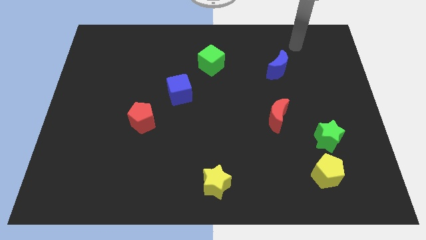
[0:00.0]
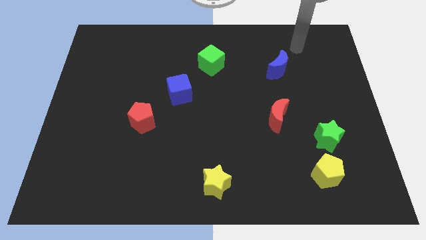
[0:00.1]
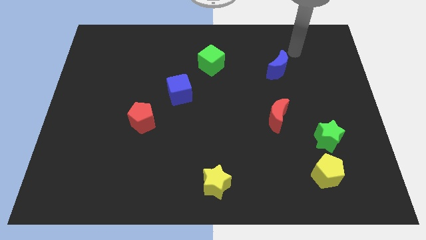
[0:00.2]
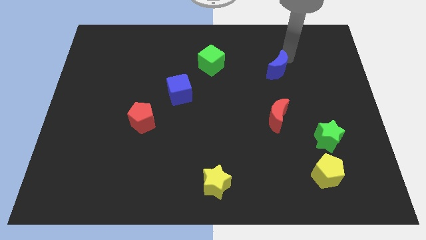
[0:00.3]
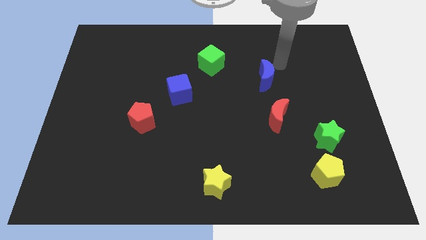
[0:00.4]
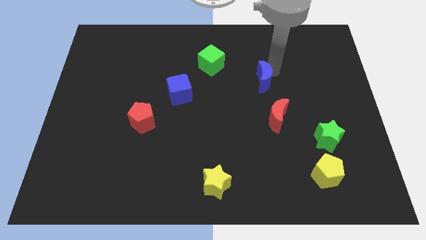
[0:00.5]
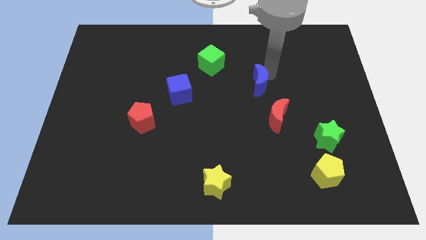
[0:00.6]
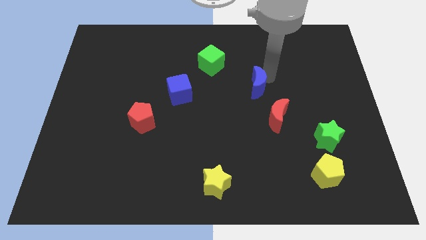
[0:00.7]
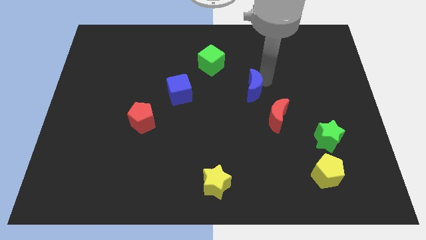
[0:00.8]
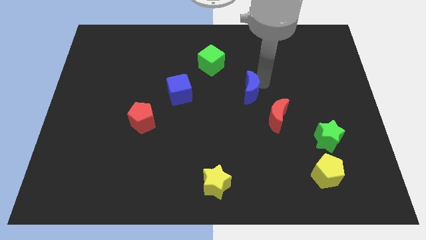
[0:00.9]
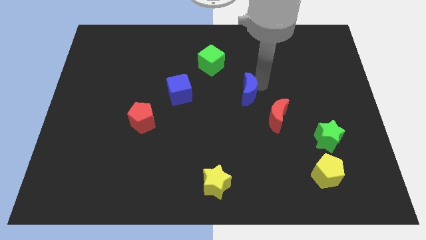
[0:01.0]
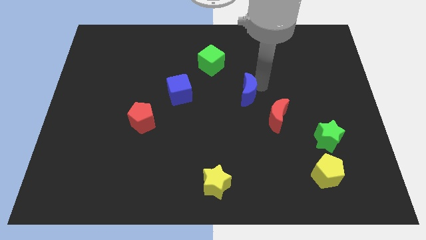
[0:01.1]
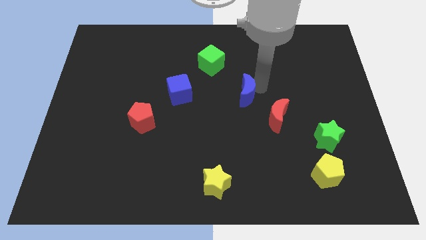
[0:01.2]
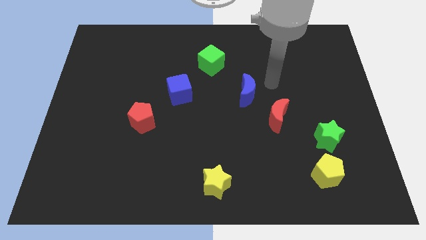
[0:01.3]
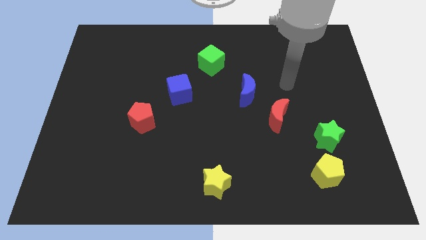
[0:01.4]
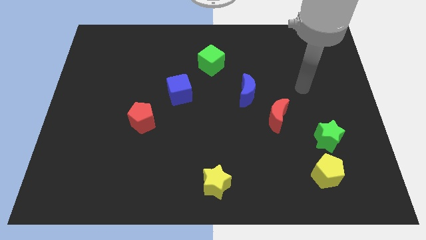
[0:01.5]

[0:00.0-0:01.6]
put the blue crescent in between the green cube and the red crescent

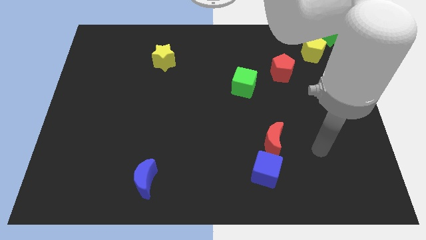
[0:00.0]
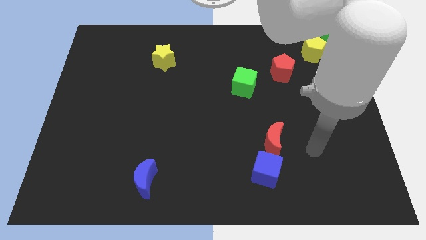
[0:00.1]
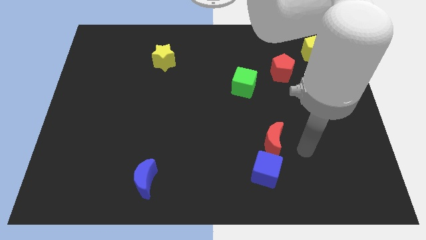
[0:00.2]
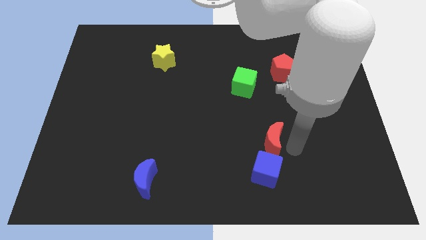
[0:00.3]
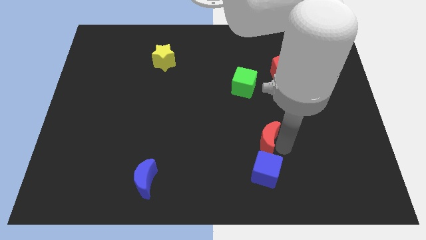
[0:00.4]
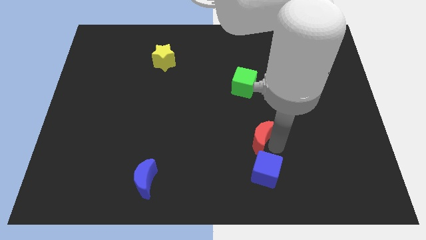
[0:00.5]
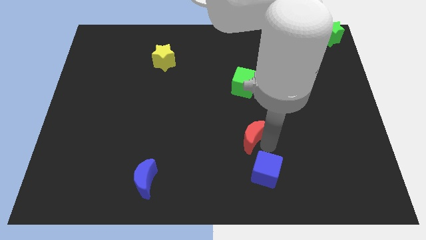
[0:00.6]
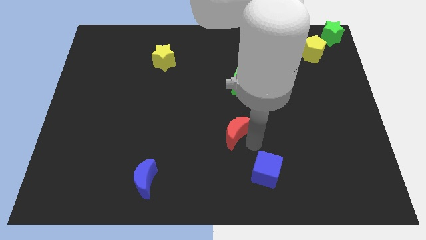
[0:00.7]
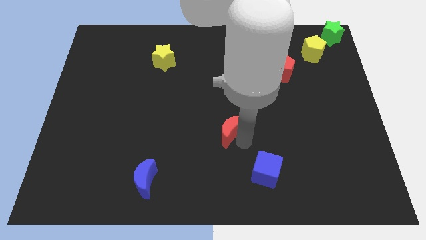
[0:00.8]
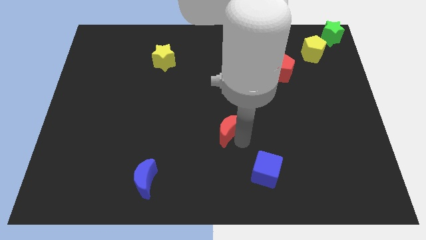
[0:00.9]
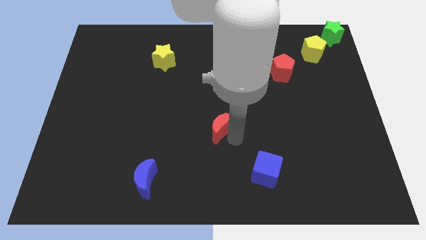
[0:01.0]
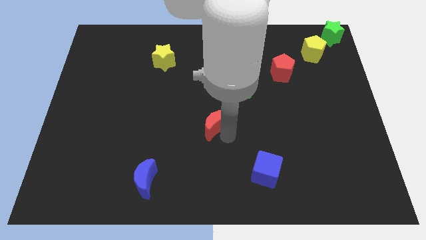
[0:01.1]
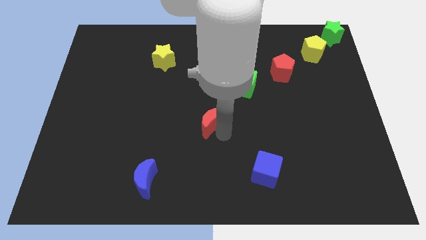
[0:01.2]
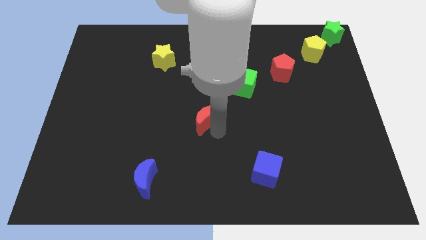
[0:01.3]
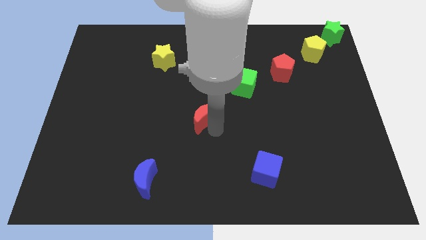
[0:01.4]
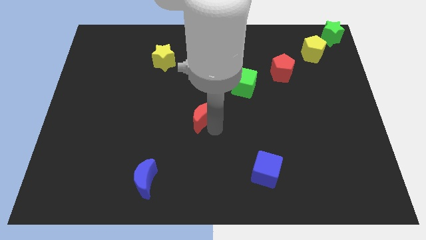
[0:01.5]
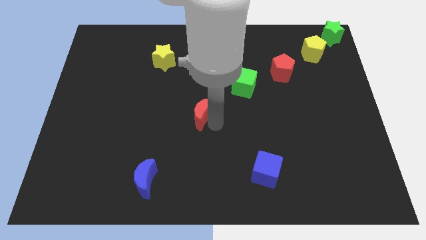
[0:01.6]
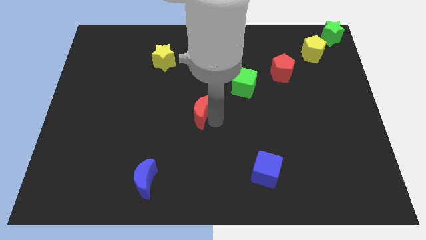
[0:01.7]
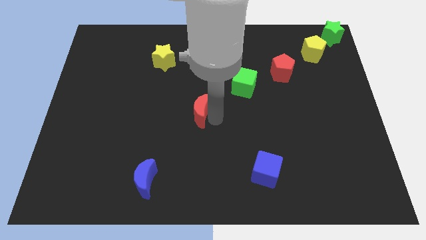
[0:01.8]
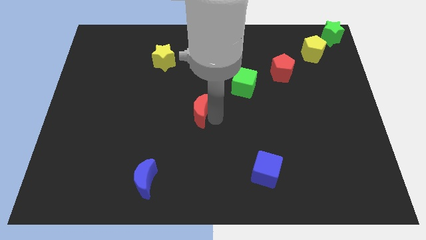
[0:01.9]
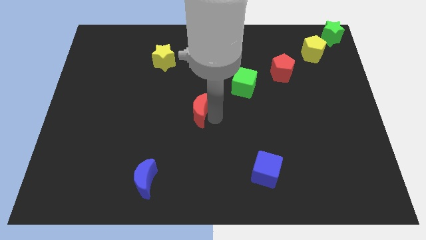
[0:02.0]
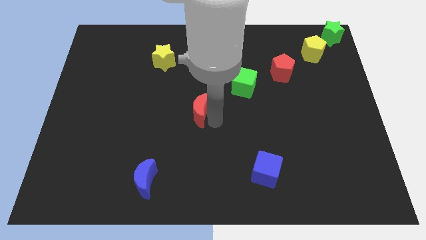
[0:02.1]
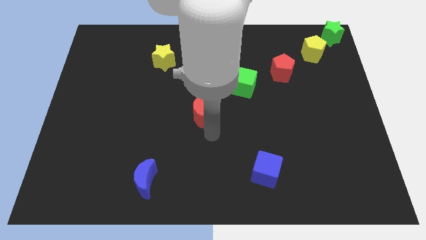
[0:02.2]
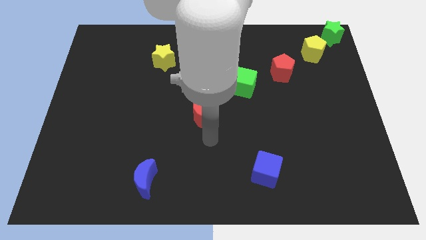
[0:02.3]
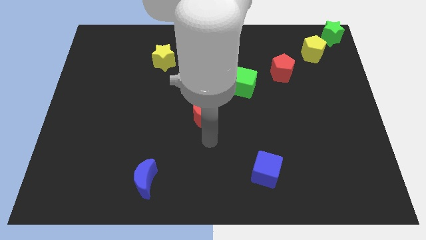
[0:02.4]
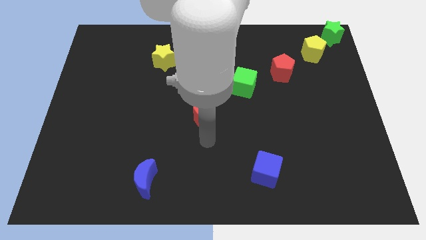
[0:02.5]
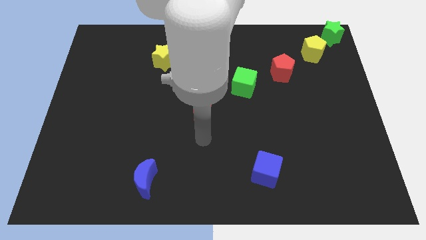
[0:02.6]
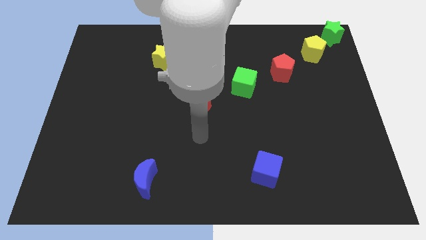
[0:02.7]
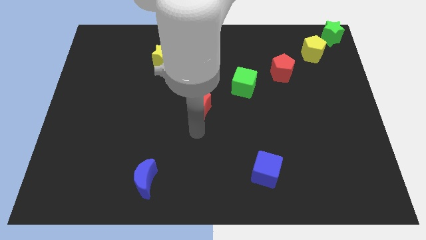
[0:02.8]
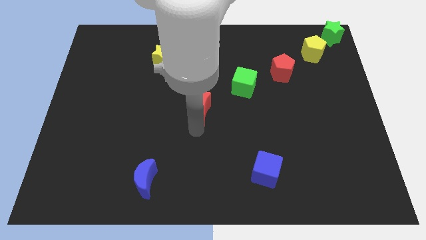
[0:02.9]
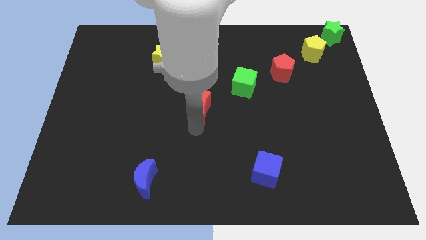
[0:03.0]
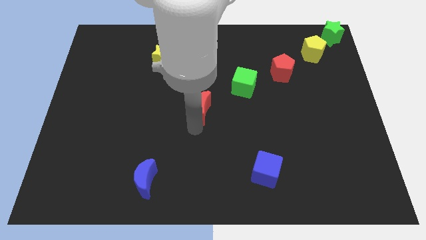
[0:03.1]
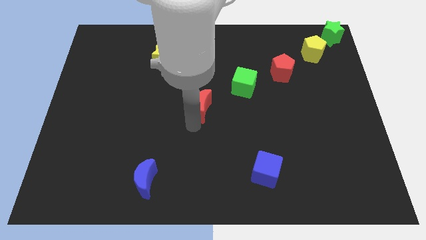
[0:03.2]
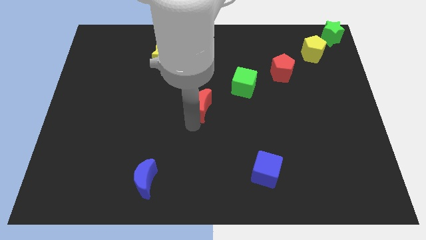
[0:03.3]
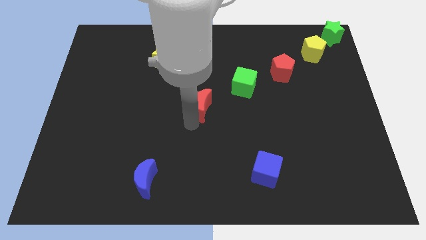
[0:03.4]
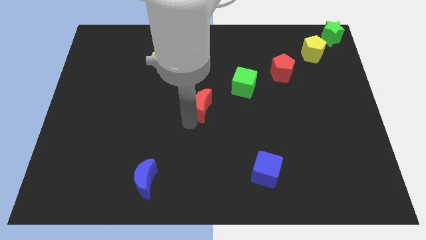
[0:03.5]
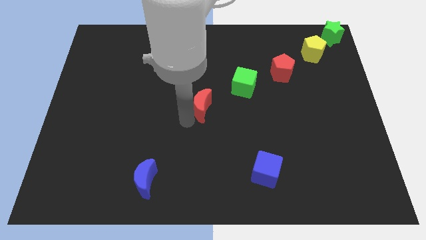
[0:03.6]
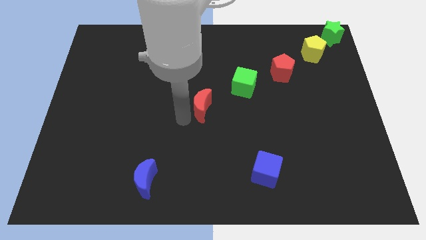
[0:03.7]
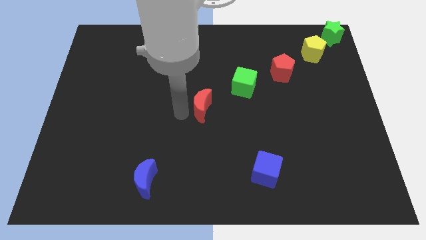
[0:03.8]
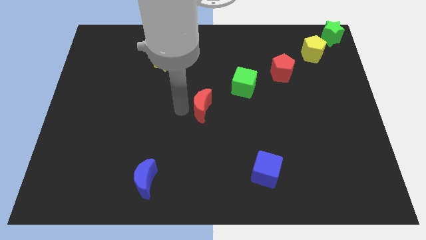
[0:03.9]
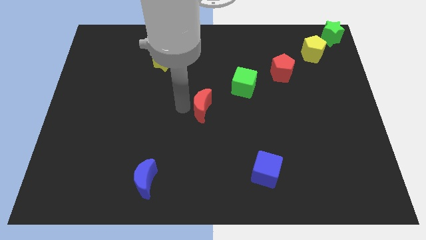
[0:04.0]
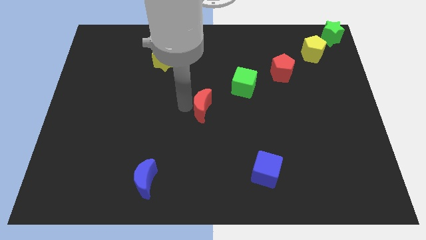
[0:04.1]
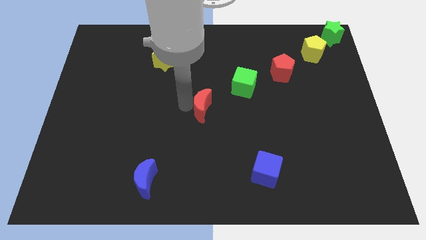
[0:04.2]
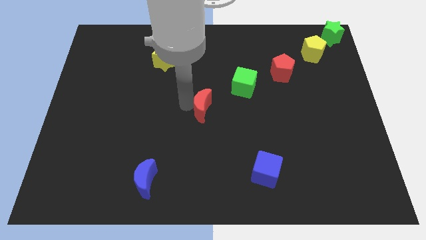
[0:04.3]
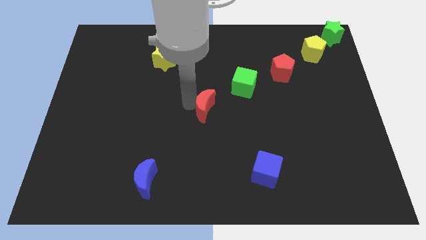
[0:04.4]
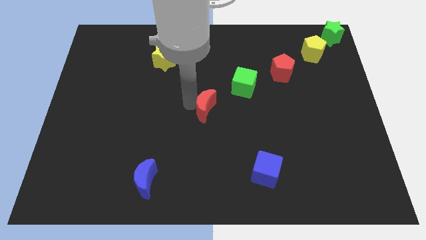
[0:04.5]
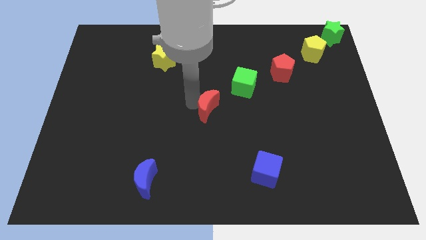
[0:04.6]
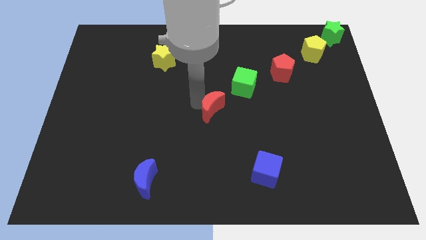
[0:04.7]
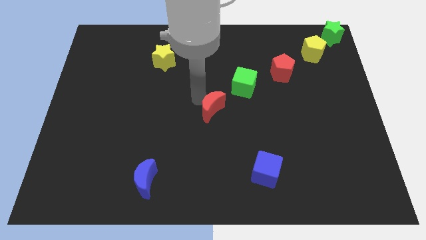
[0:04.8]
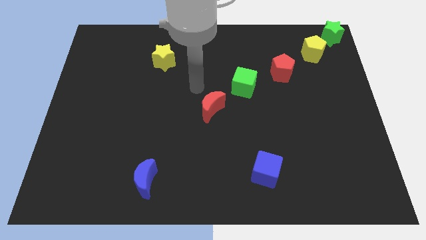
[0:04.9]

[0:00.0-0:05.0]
push the red crescent to the diagonal bottom left of the green cube

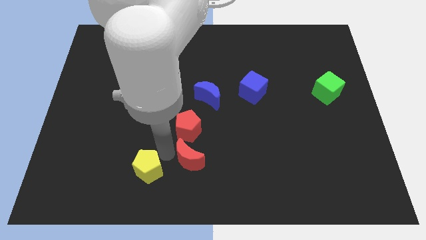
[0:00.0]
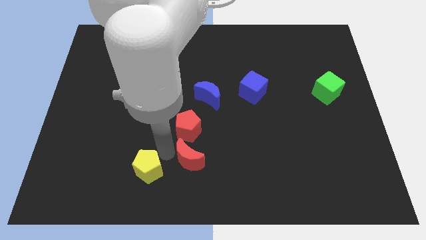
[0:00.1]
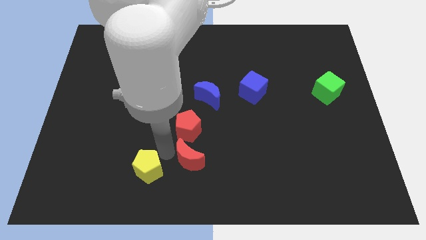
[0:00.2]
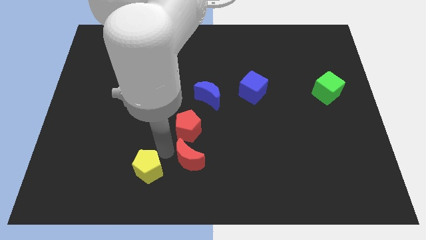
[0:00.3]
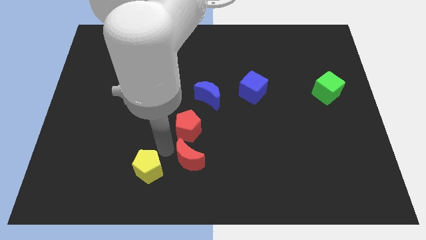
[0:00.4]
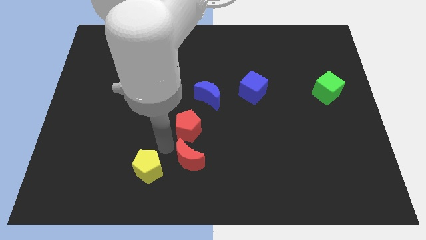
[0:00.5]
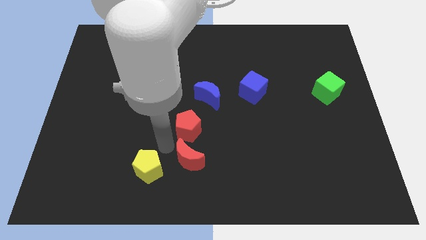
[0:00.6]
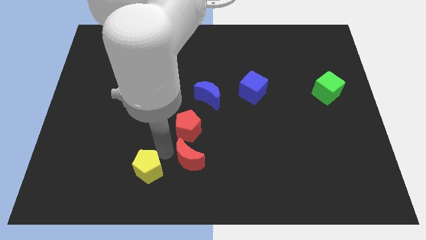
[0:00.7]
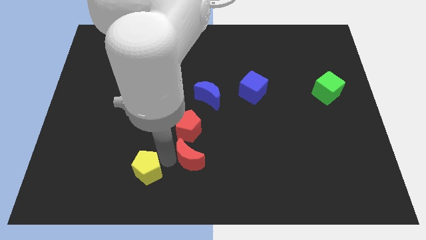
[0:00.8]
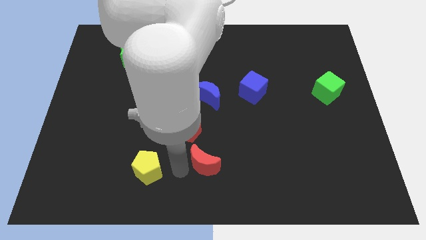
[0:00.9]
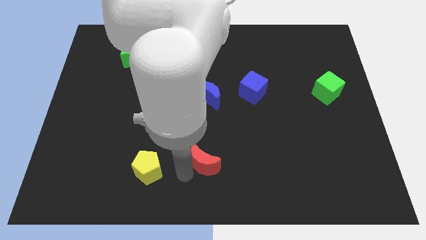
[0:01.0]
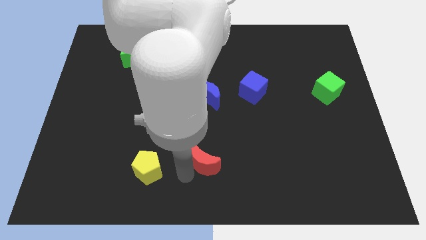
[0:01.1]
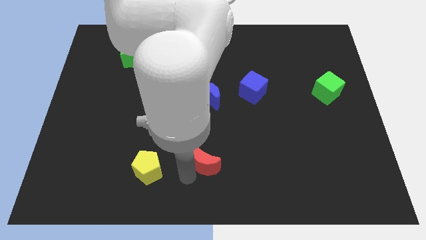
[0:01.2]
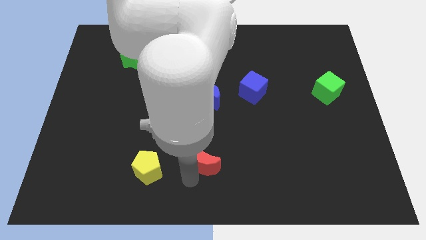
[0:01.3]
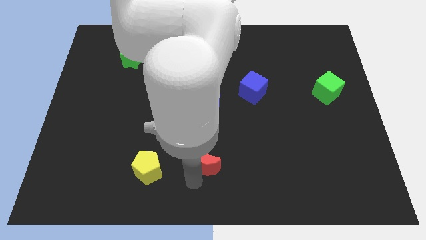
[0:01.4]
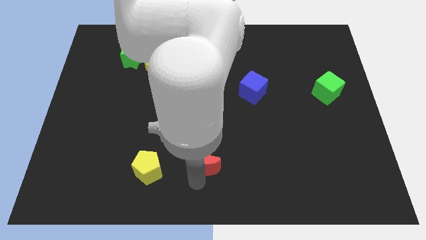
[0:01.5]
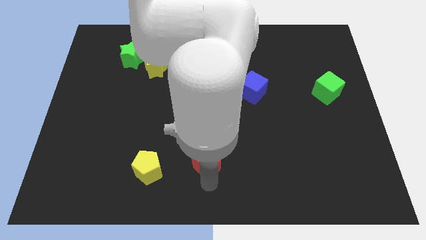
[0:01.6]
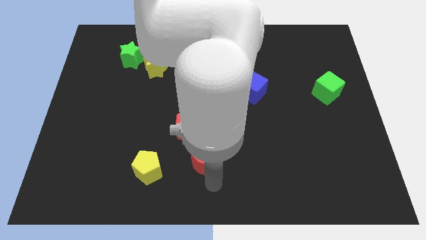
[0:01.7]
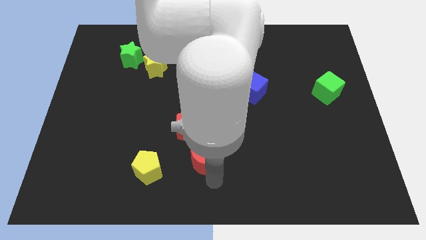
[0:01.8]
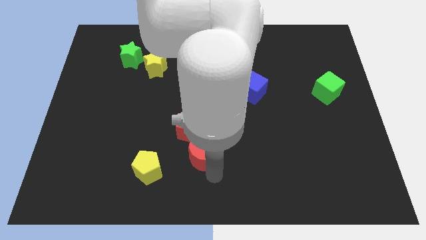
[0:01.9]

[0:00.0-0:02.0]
move the red crescent below the red pentagon

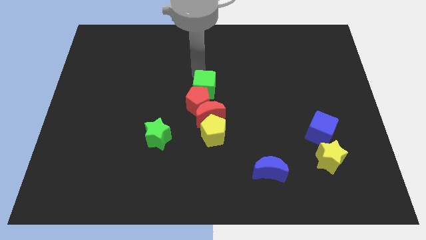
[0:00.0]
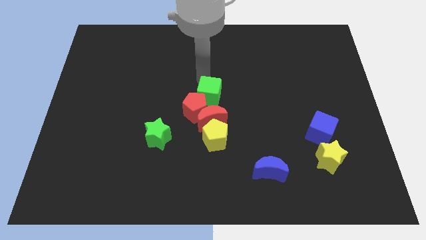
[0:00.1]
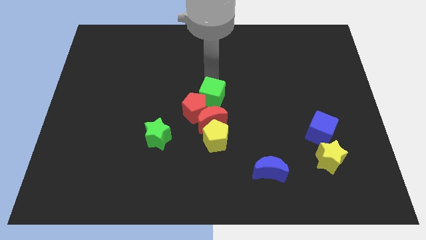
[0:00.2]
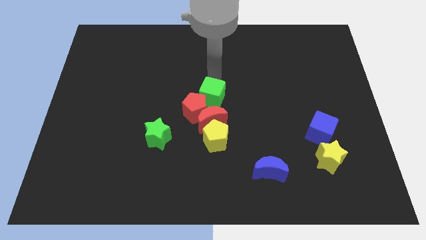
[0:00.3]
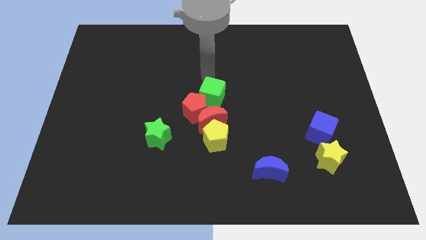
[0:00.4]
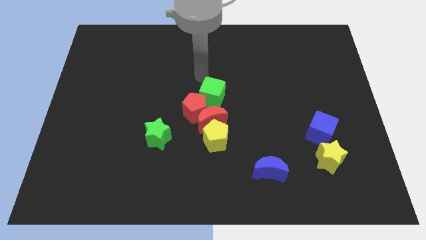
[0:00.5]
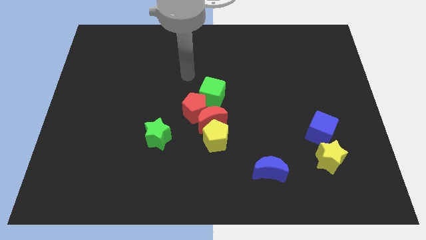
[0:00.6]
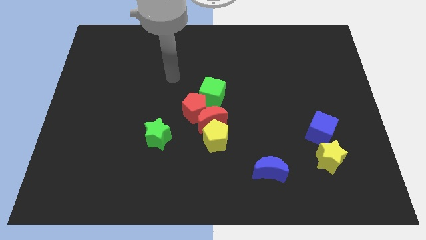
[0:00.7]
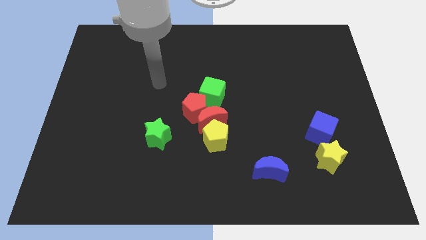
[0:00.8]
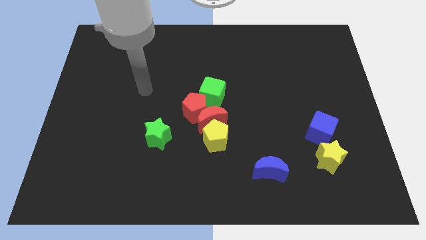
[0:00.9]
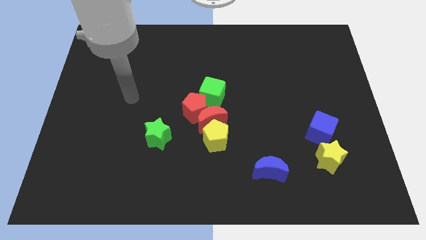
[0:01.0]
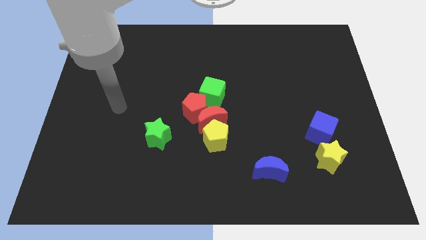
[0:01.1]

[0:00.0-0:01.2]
slide the green cube towards the center of the board
